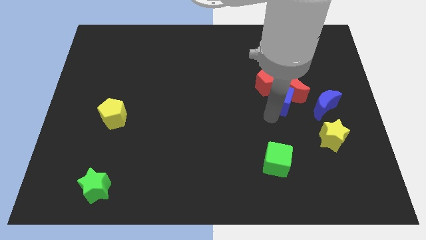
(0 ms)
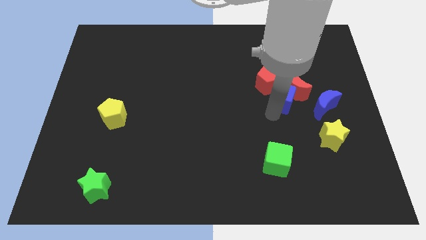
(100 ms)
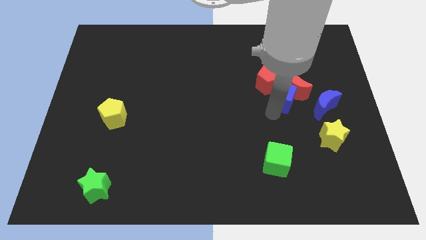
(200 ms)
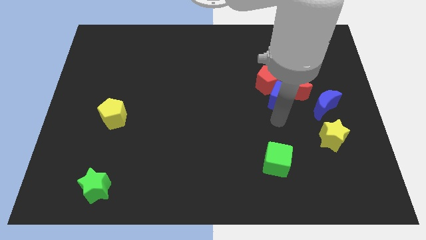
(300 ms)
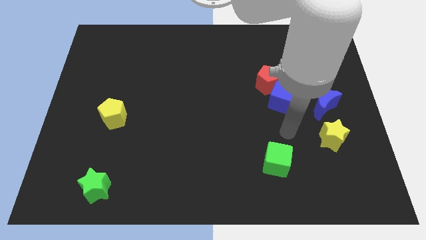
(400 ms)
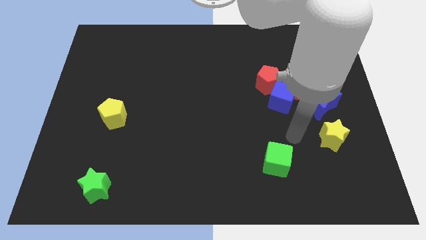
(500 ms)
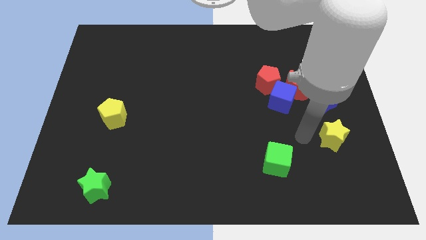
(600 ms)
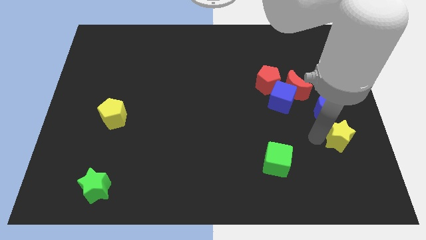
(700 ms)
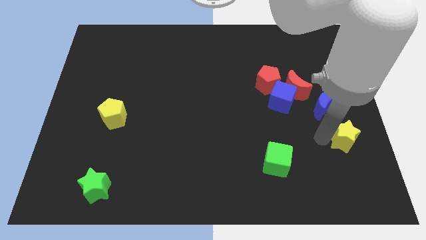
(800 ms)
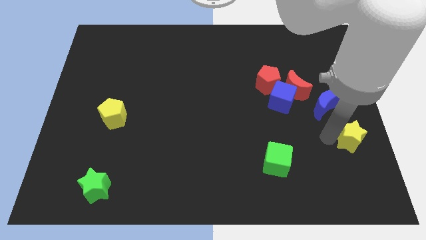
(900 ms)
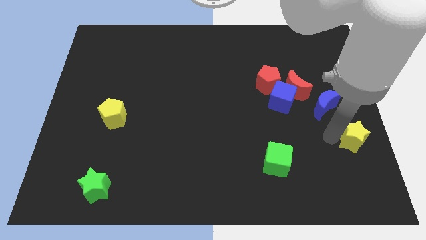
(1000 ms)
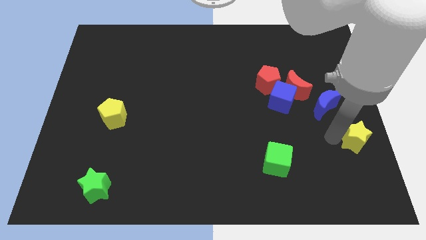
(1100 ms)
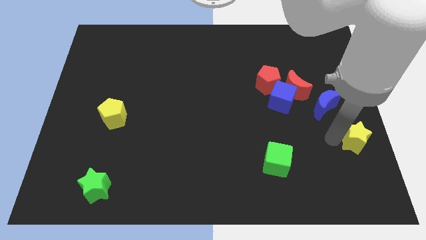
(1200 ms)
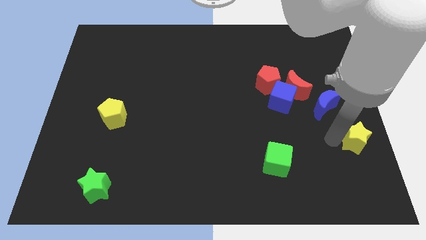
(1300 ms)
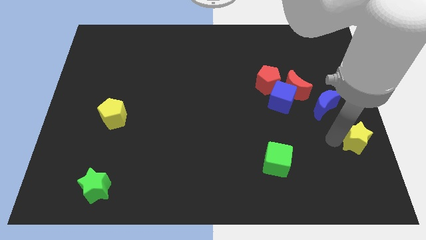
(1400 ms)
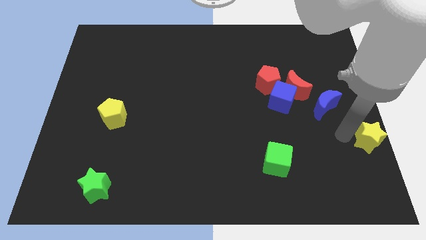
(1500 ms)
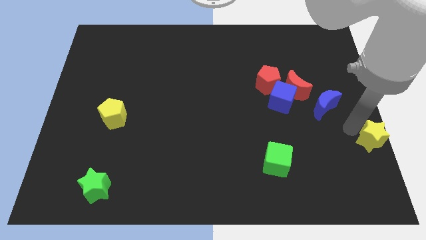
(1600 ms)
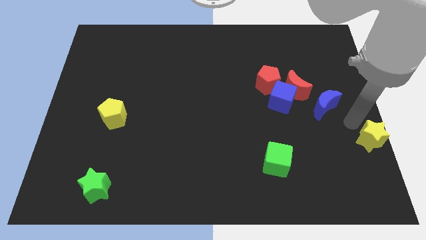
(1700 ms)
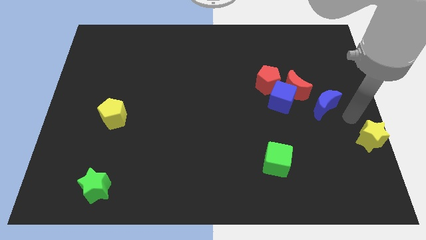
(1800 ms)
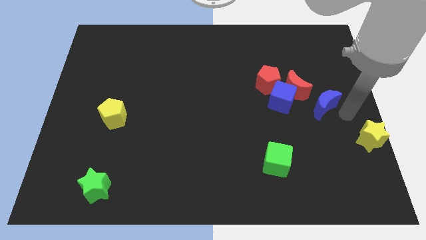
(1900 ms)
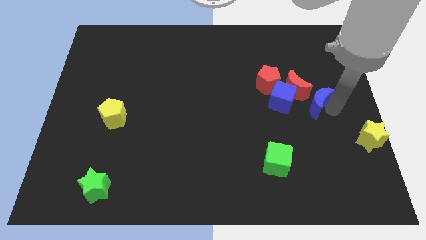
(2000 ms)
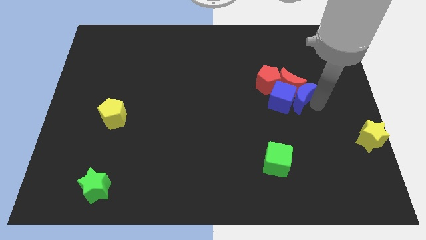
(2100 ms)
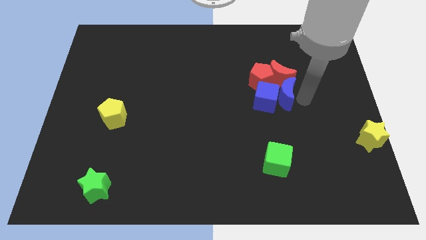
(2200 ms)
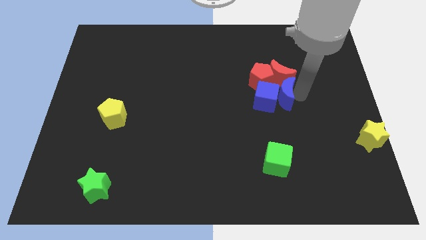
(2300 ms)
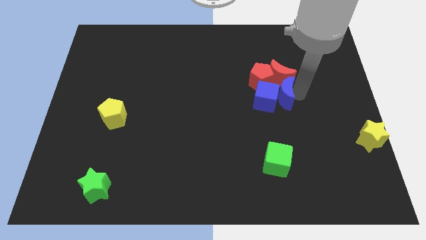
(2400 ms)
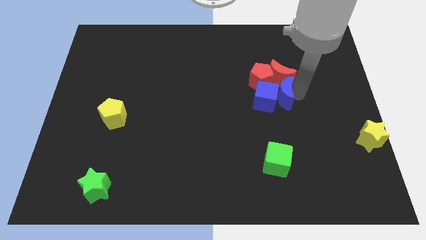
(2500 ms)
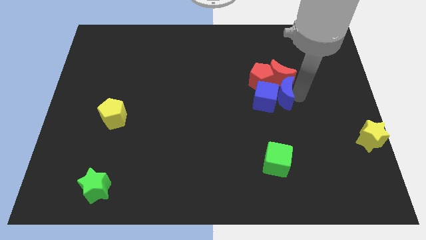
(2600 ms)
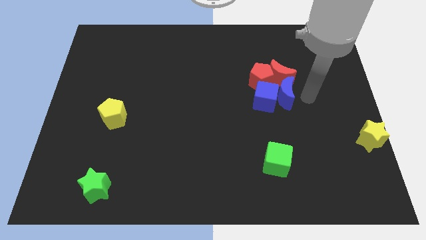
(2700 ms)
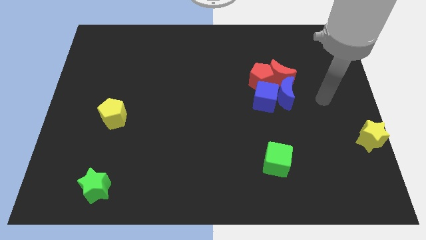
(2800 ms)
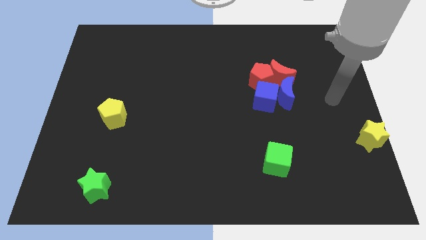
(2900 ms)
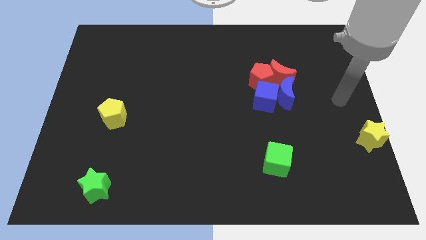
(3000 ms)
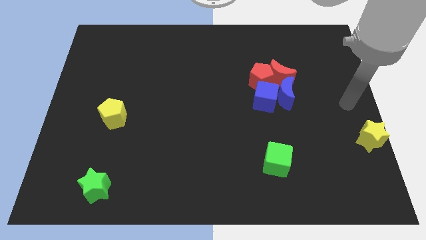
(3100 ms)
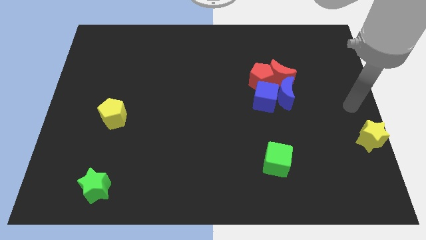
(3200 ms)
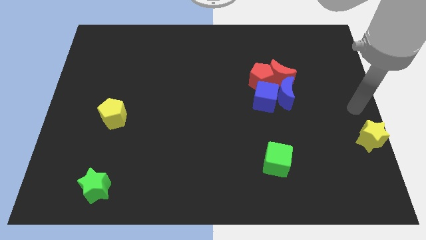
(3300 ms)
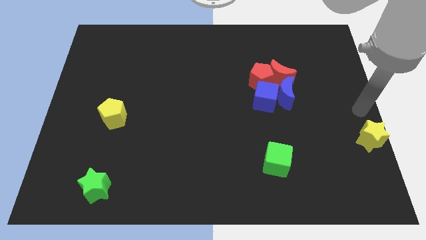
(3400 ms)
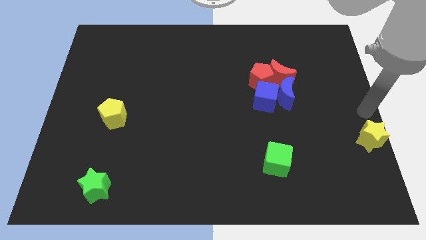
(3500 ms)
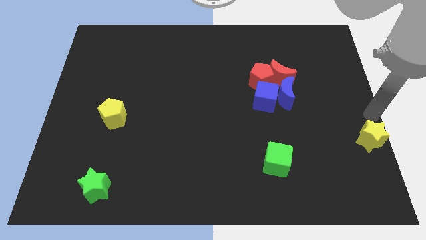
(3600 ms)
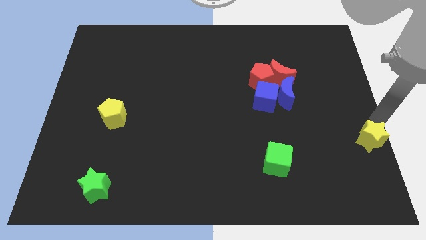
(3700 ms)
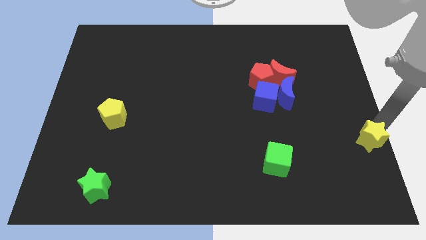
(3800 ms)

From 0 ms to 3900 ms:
push the blue blocks down to the red blocks

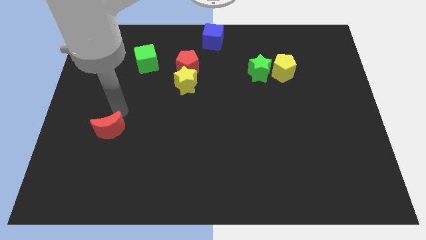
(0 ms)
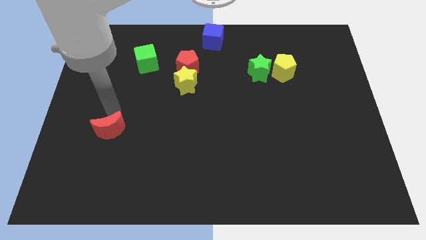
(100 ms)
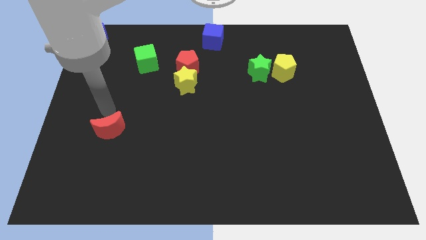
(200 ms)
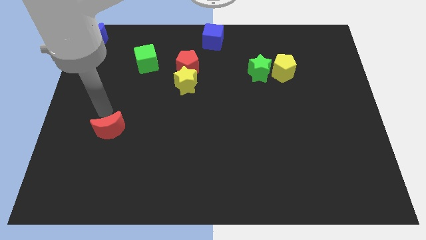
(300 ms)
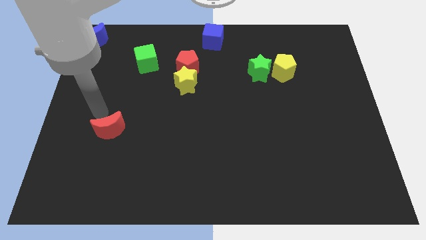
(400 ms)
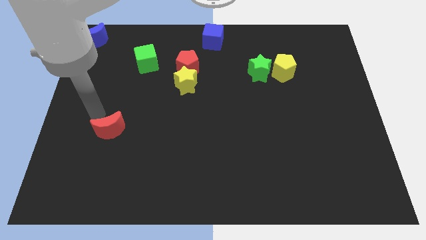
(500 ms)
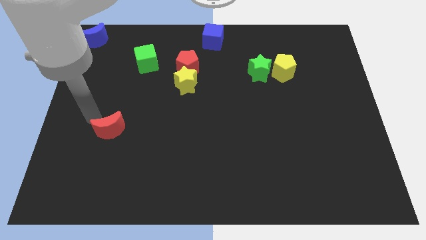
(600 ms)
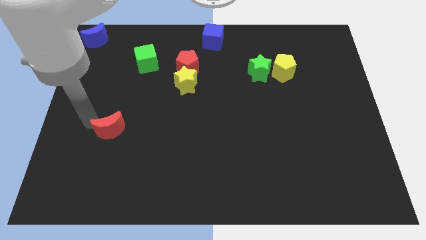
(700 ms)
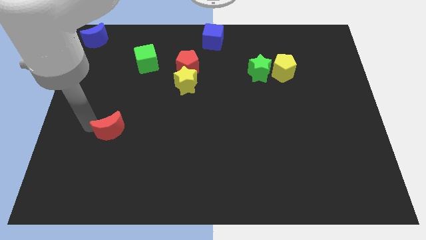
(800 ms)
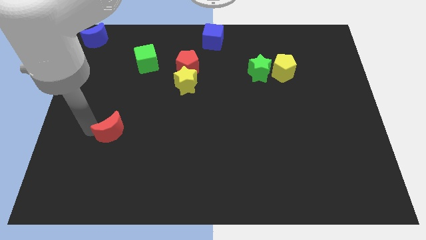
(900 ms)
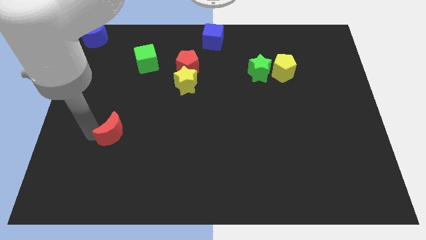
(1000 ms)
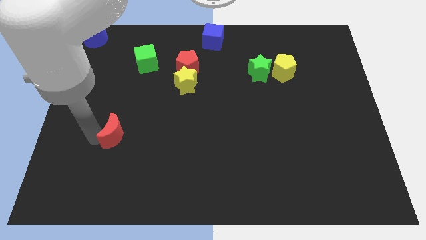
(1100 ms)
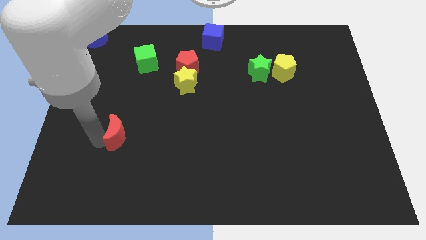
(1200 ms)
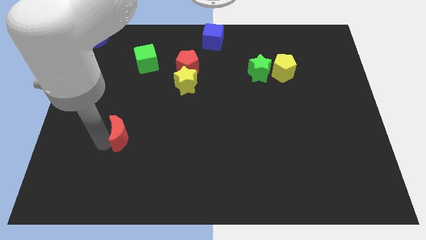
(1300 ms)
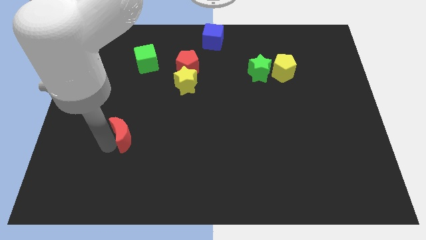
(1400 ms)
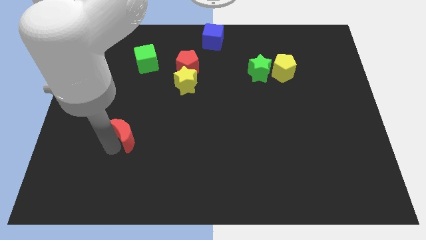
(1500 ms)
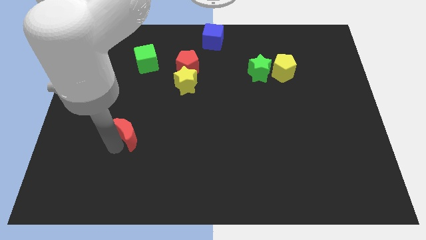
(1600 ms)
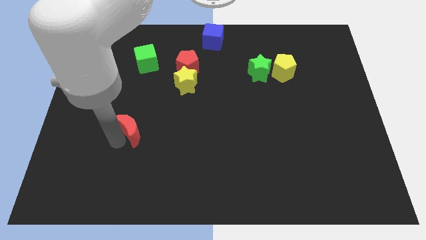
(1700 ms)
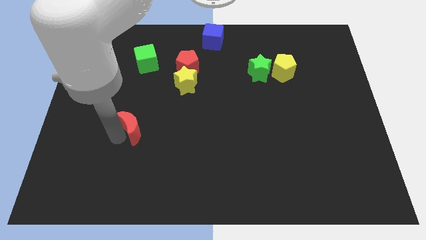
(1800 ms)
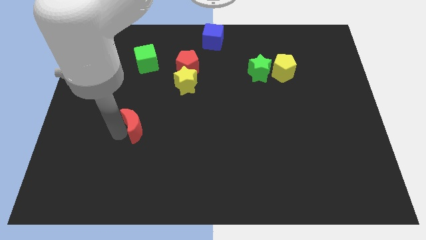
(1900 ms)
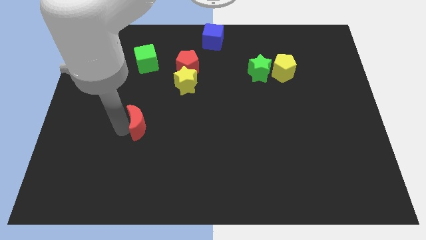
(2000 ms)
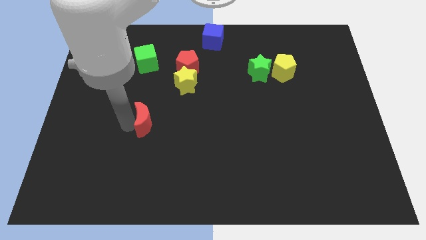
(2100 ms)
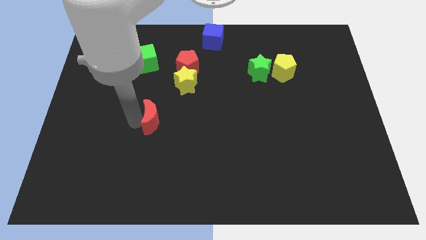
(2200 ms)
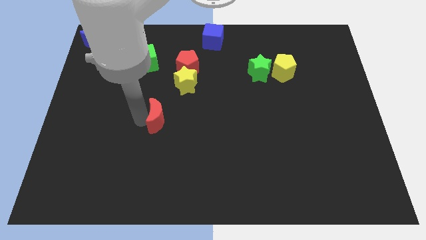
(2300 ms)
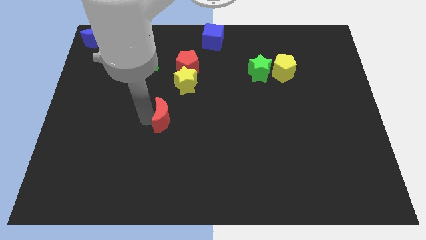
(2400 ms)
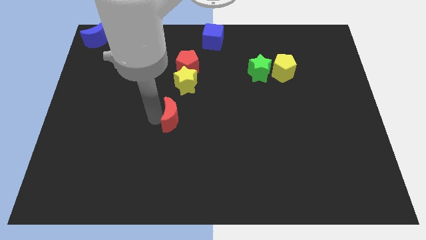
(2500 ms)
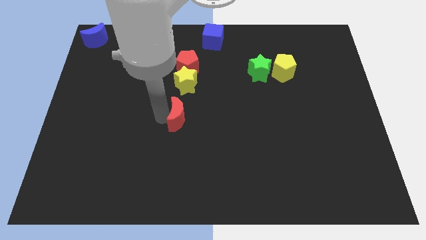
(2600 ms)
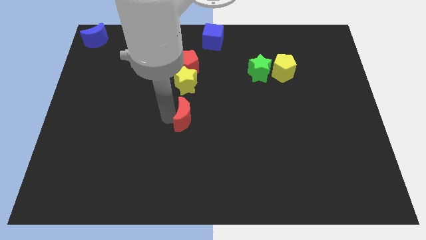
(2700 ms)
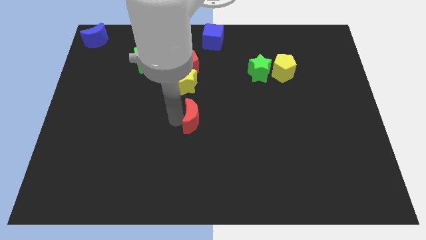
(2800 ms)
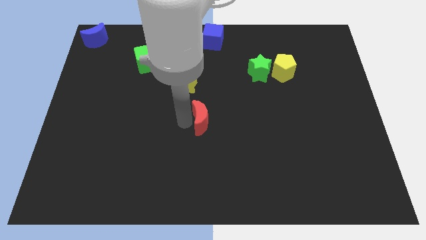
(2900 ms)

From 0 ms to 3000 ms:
slide the red moon to the center of the board

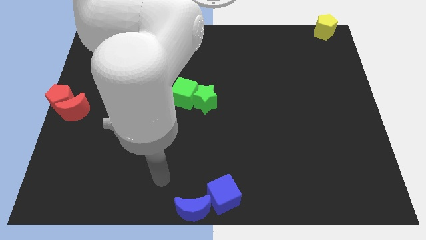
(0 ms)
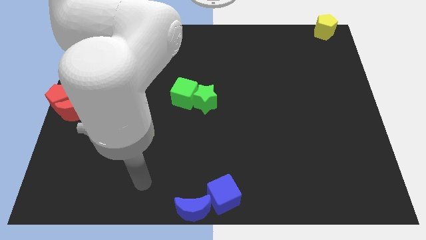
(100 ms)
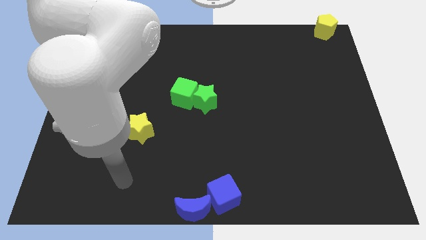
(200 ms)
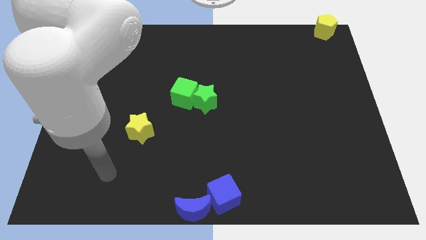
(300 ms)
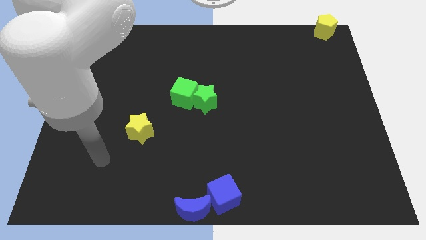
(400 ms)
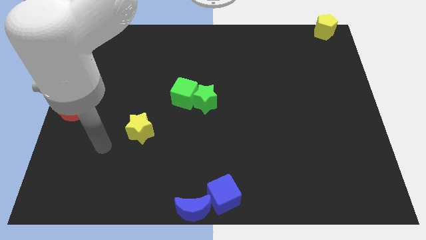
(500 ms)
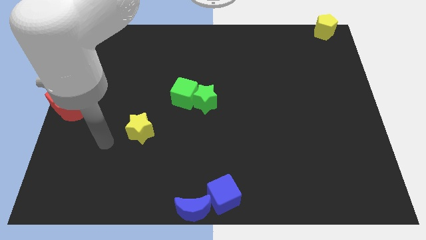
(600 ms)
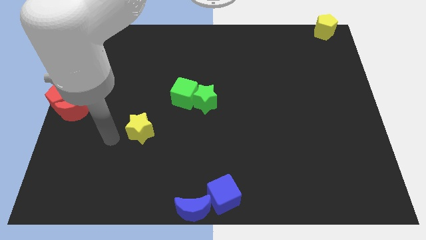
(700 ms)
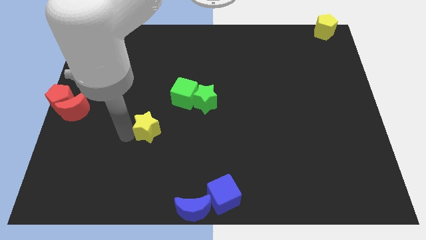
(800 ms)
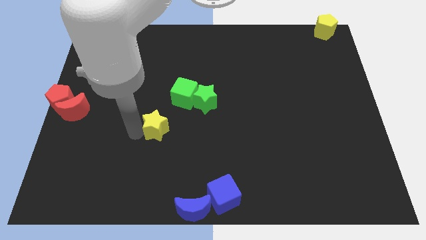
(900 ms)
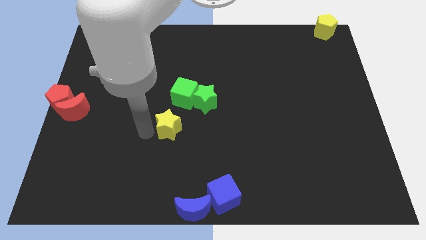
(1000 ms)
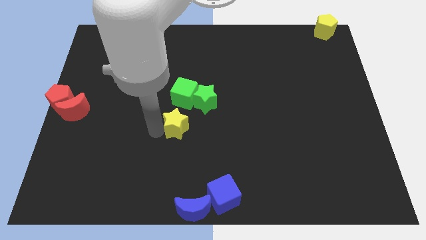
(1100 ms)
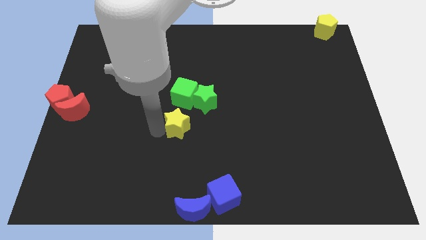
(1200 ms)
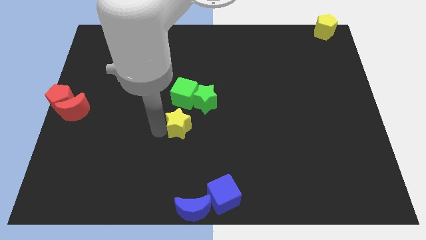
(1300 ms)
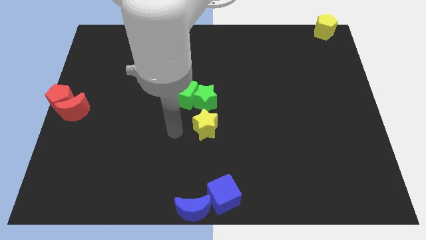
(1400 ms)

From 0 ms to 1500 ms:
move the yellow star below the green star

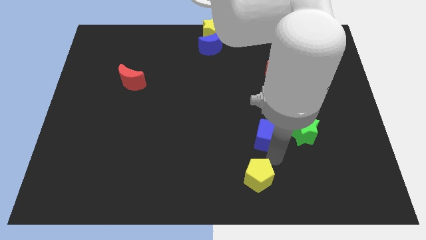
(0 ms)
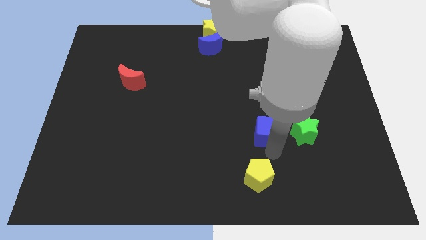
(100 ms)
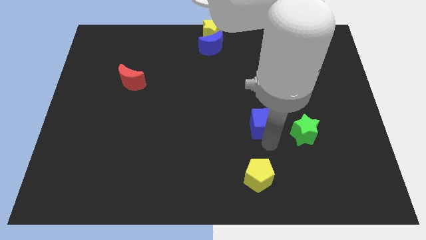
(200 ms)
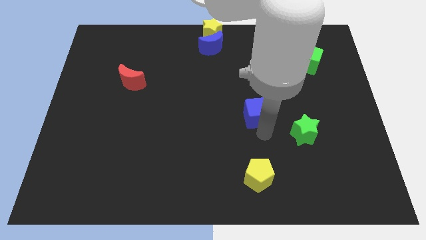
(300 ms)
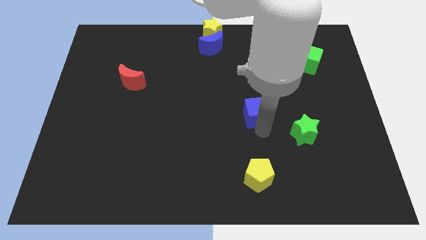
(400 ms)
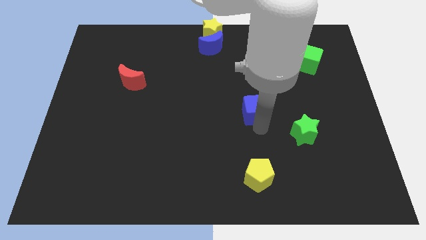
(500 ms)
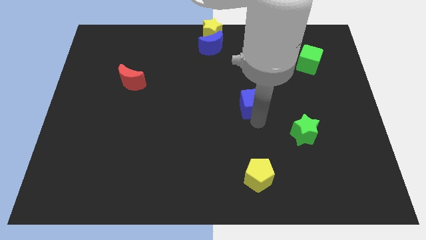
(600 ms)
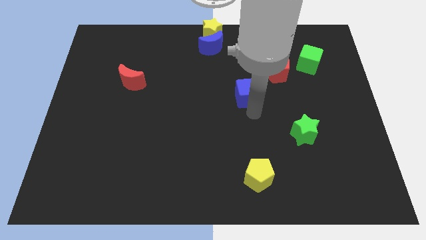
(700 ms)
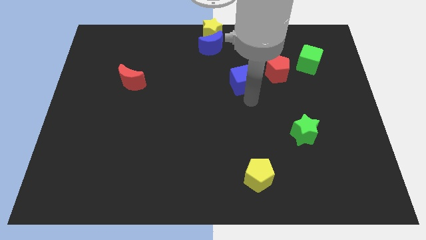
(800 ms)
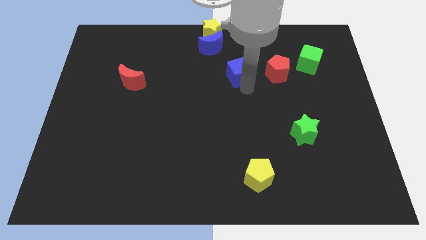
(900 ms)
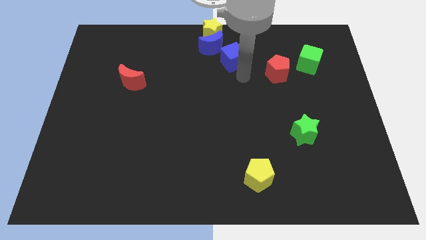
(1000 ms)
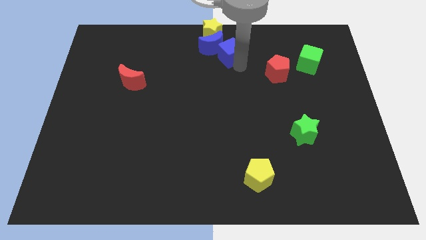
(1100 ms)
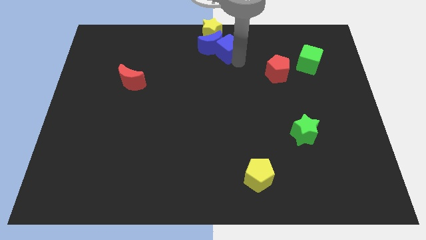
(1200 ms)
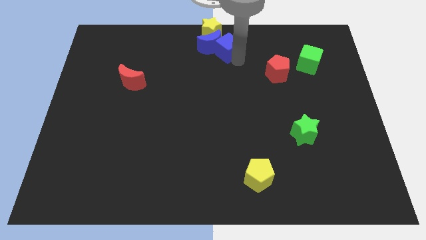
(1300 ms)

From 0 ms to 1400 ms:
push the blue cube into the blue moon
